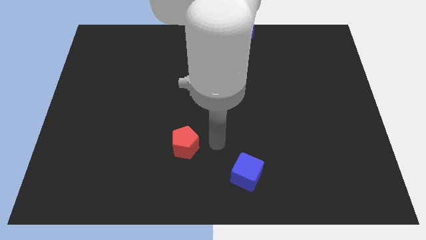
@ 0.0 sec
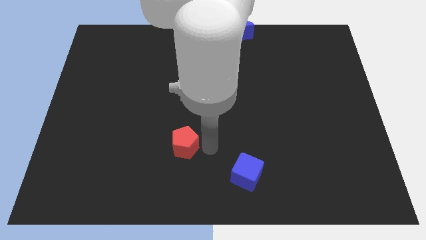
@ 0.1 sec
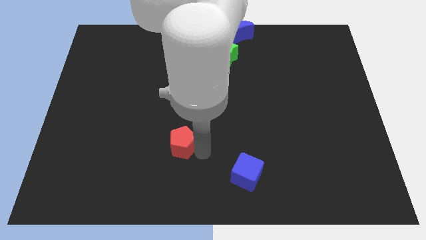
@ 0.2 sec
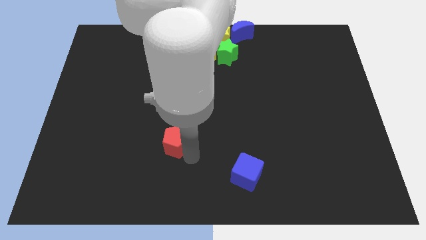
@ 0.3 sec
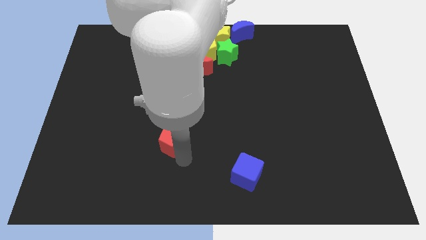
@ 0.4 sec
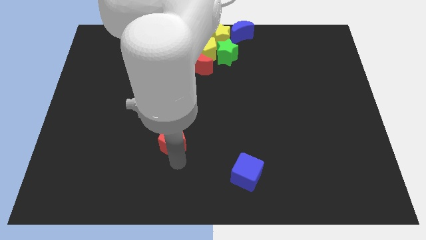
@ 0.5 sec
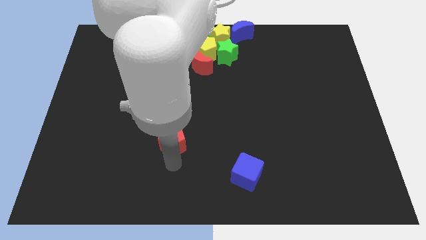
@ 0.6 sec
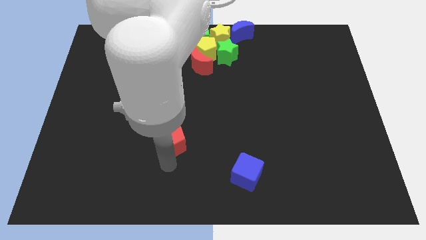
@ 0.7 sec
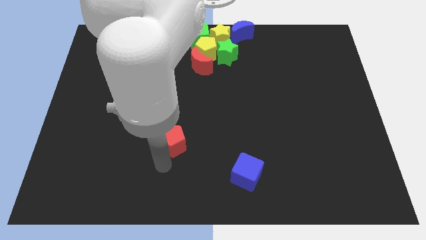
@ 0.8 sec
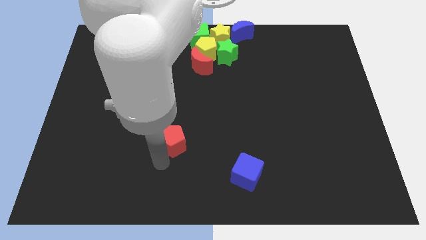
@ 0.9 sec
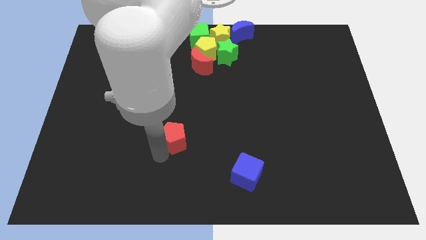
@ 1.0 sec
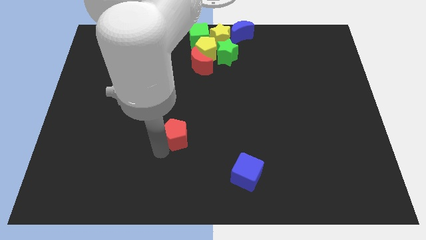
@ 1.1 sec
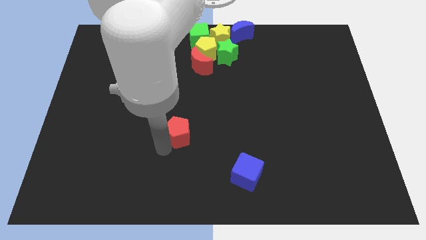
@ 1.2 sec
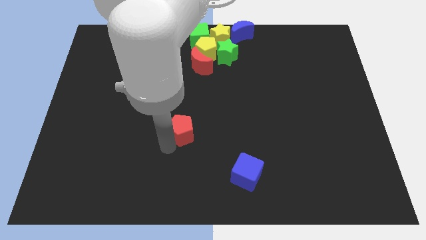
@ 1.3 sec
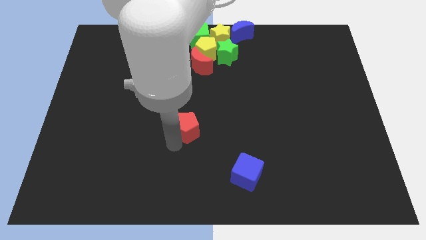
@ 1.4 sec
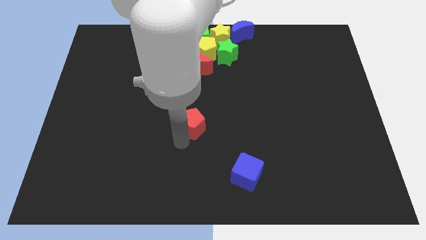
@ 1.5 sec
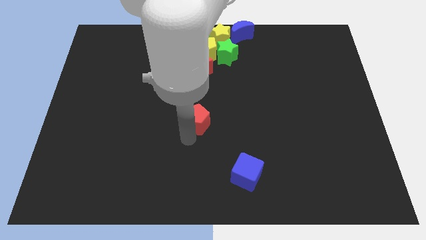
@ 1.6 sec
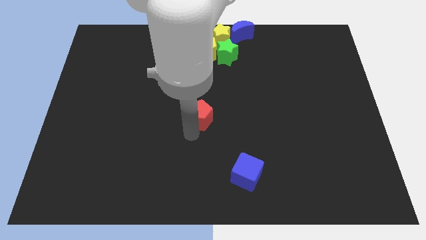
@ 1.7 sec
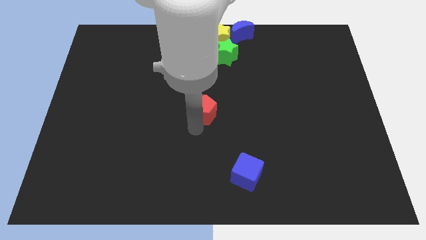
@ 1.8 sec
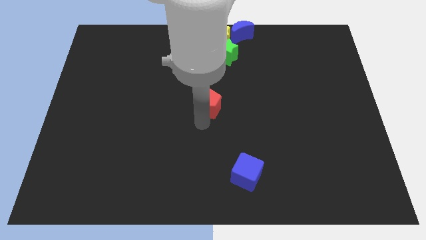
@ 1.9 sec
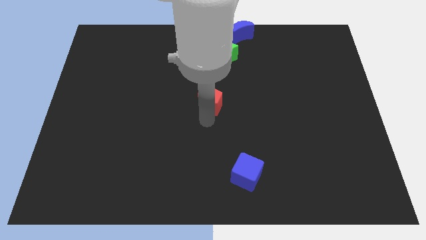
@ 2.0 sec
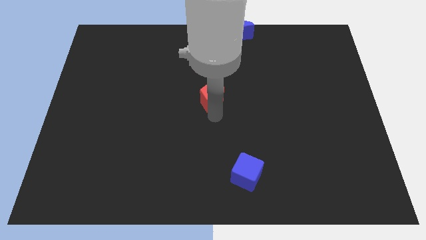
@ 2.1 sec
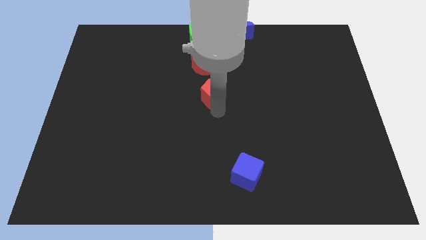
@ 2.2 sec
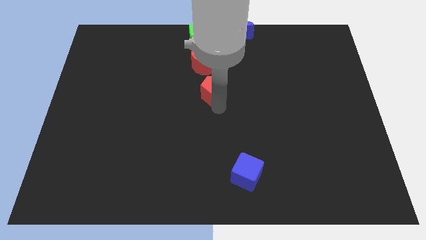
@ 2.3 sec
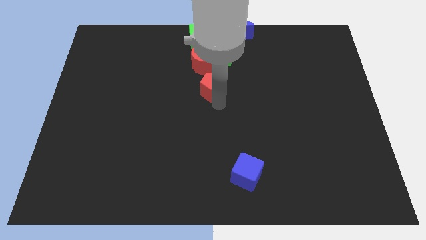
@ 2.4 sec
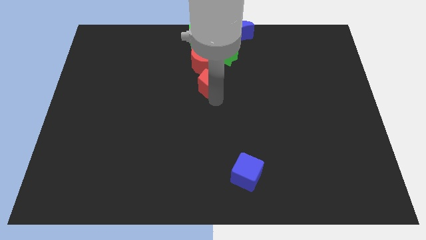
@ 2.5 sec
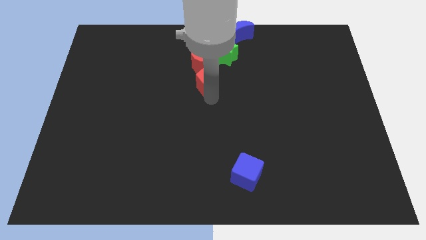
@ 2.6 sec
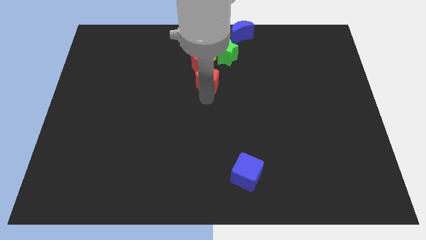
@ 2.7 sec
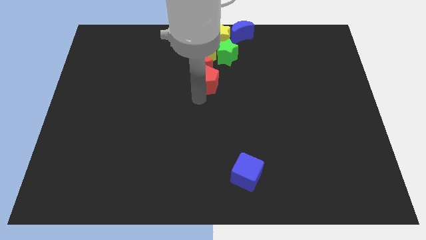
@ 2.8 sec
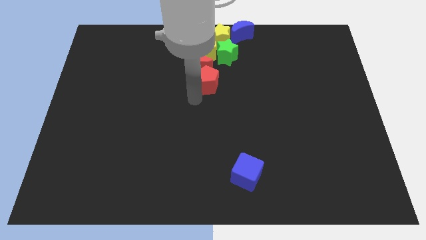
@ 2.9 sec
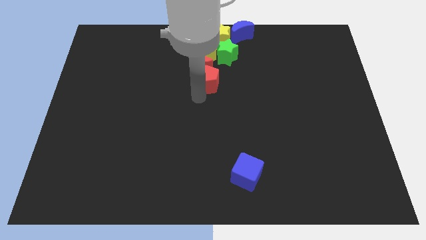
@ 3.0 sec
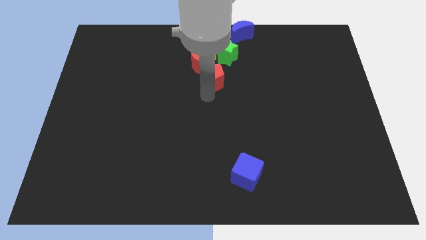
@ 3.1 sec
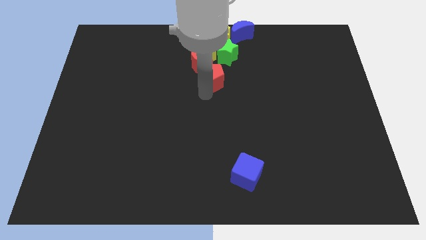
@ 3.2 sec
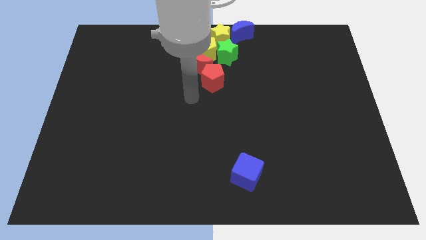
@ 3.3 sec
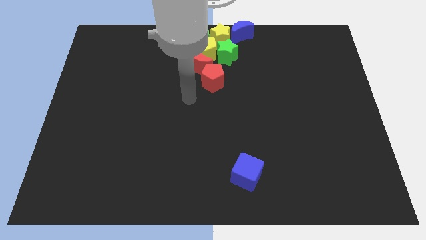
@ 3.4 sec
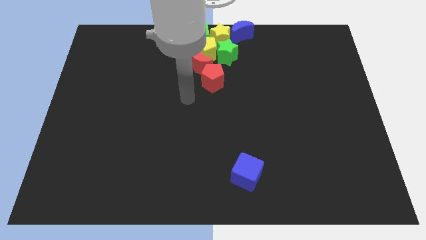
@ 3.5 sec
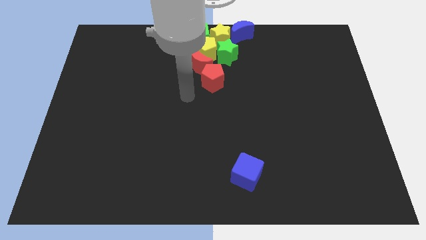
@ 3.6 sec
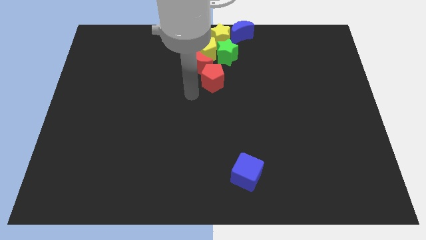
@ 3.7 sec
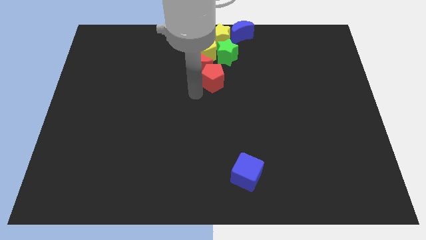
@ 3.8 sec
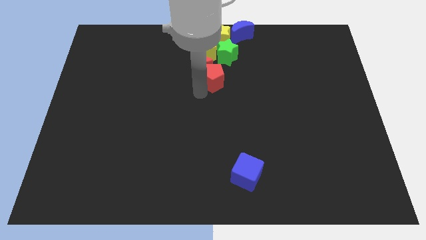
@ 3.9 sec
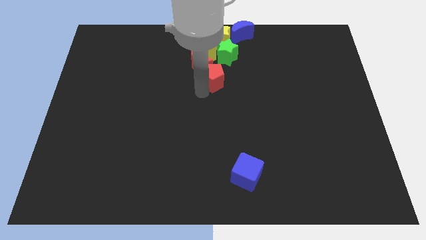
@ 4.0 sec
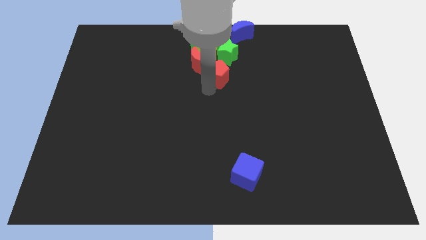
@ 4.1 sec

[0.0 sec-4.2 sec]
move the red pentagon towards the red crescent

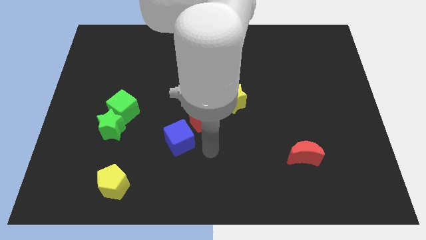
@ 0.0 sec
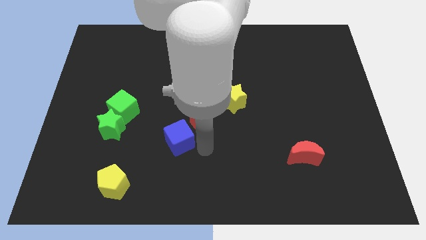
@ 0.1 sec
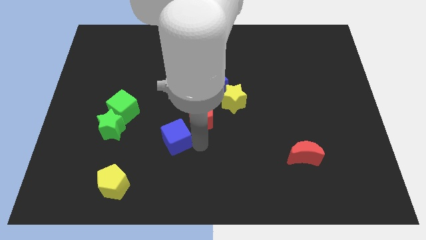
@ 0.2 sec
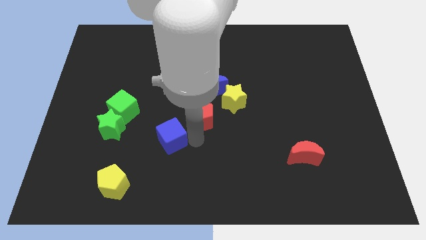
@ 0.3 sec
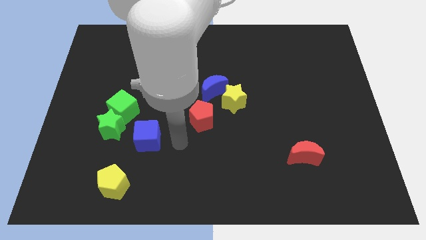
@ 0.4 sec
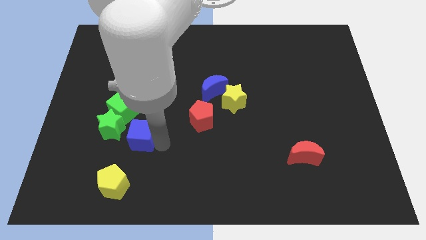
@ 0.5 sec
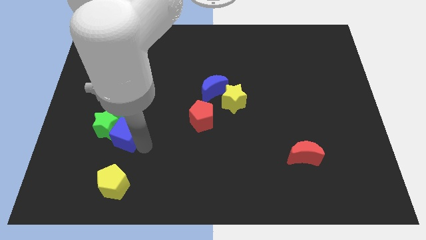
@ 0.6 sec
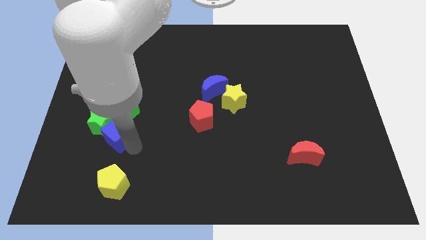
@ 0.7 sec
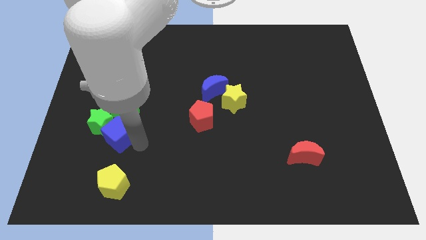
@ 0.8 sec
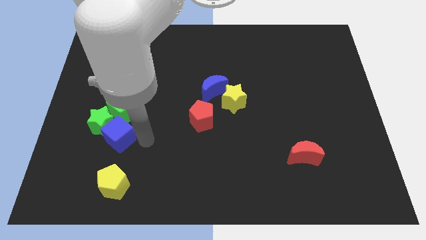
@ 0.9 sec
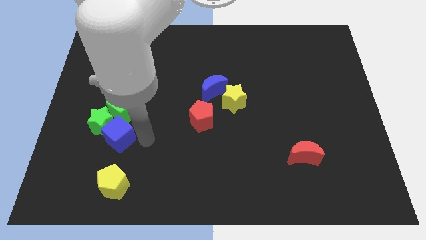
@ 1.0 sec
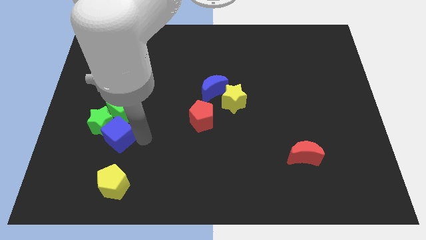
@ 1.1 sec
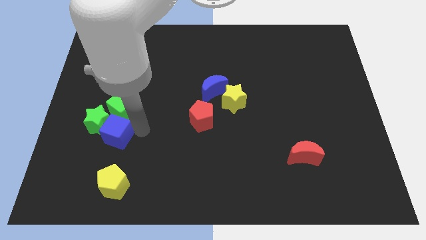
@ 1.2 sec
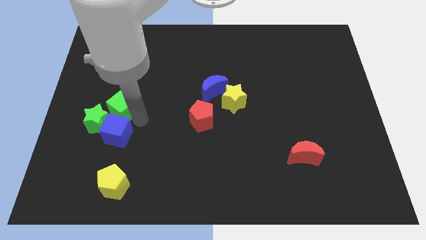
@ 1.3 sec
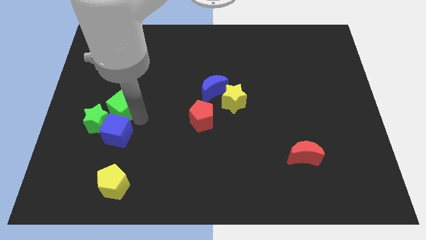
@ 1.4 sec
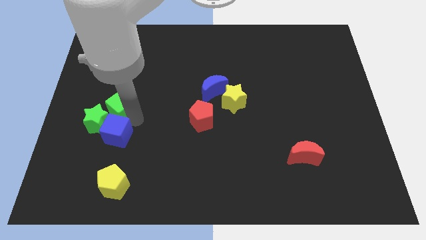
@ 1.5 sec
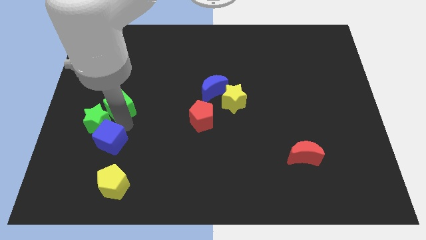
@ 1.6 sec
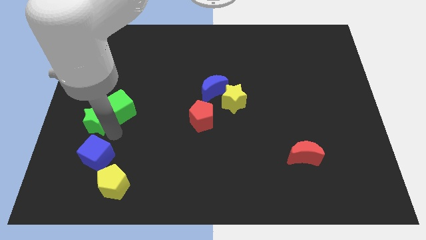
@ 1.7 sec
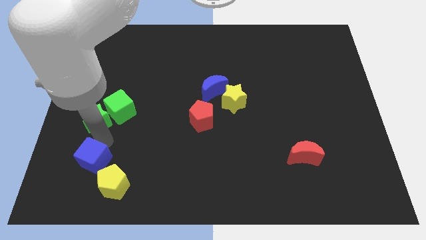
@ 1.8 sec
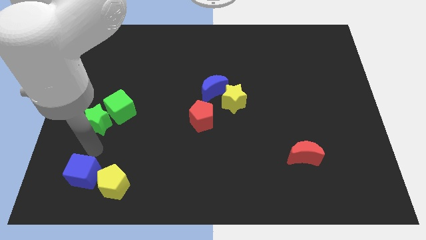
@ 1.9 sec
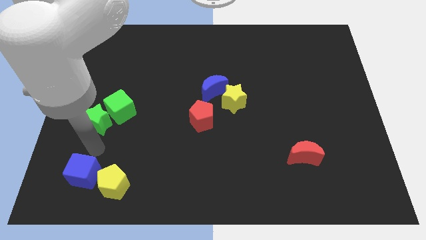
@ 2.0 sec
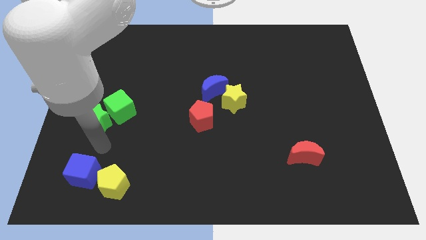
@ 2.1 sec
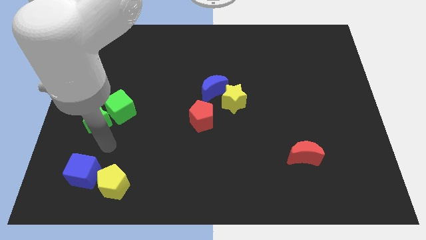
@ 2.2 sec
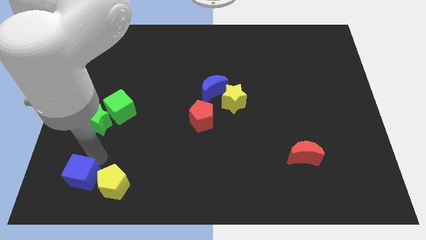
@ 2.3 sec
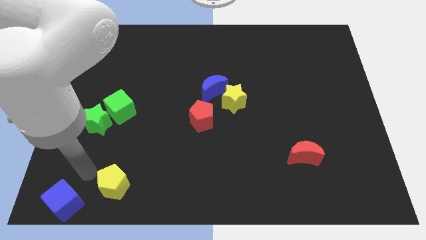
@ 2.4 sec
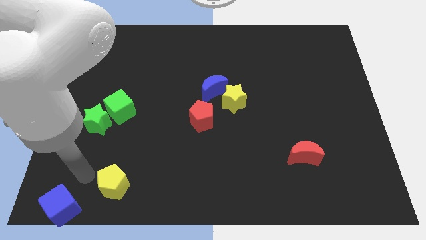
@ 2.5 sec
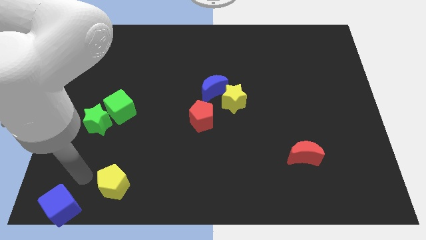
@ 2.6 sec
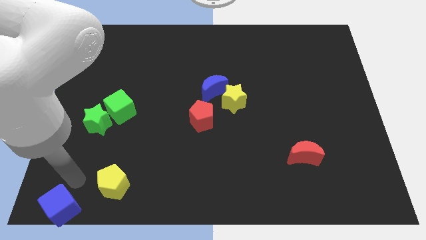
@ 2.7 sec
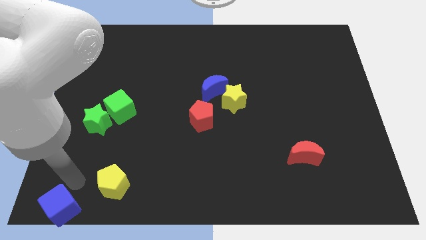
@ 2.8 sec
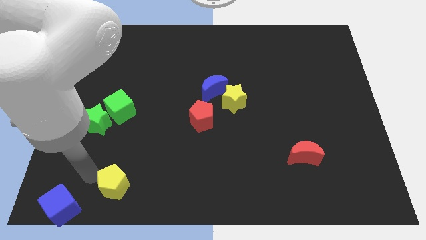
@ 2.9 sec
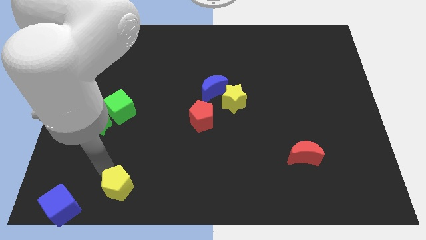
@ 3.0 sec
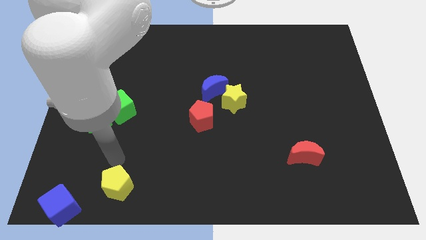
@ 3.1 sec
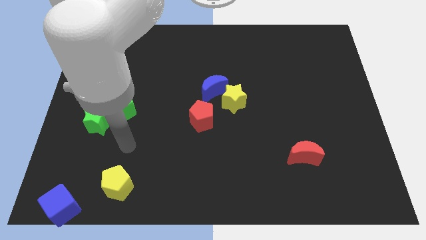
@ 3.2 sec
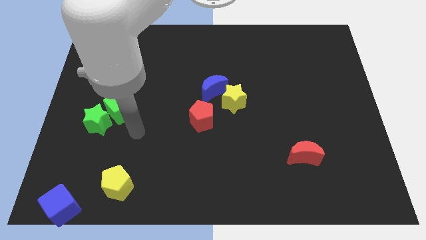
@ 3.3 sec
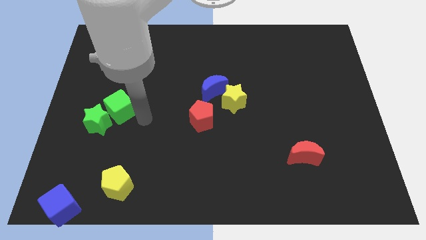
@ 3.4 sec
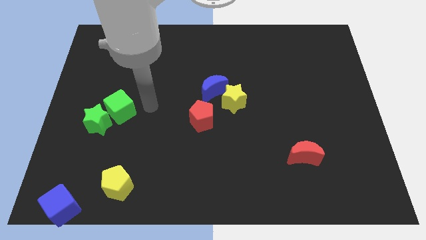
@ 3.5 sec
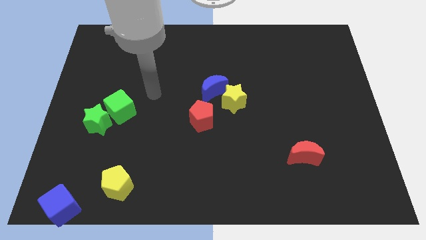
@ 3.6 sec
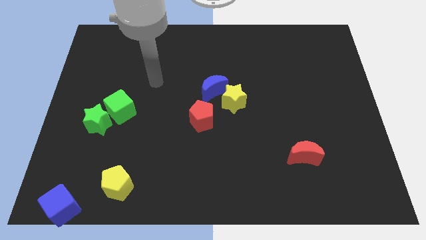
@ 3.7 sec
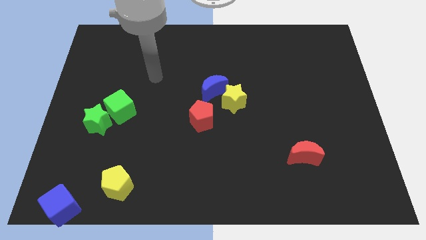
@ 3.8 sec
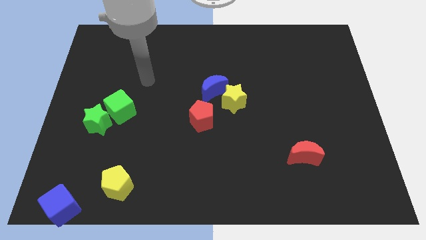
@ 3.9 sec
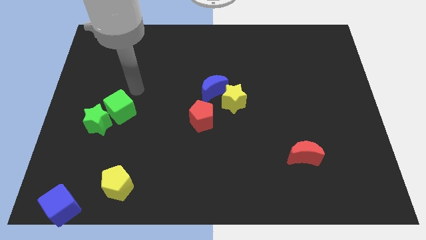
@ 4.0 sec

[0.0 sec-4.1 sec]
place the blue cube at the bottom left of the board

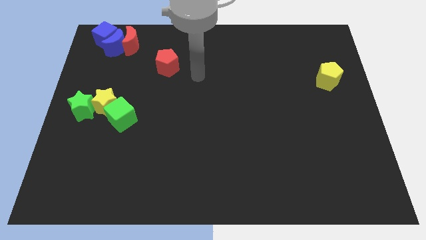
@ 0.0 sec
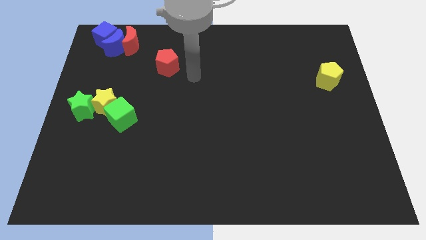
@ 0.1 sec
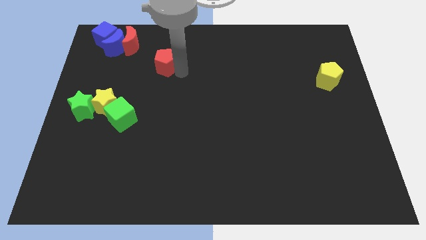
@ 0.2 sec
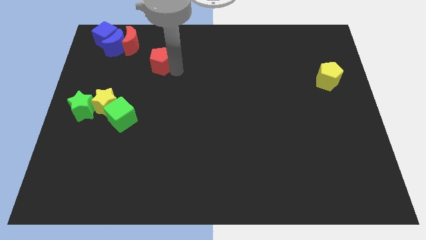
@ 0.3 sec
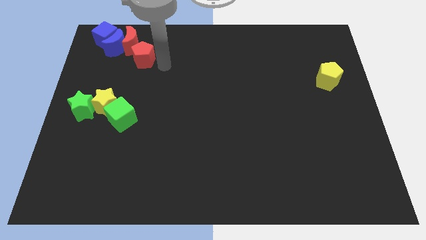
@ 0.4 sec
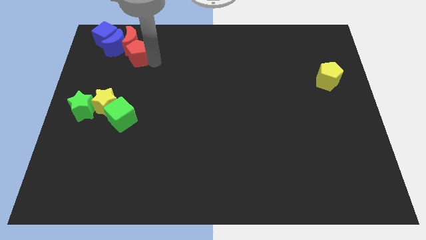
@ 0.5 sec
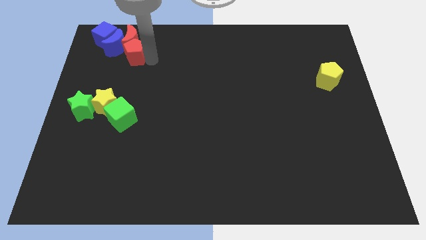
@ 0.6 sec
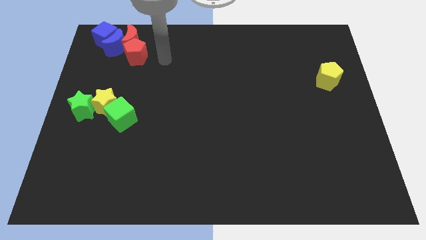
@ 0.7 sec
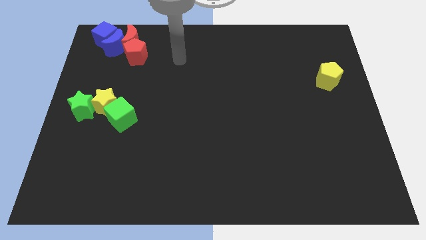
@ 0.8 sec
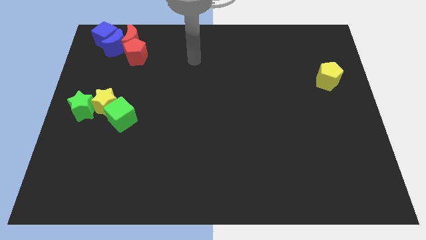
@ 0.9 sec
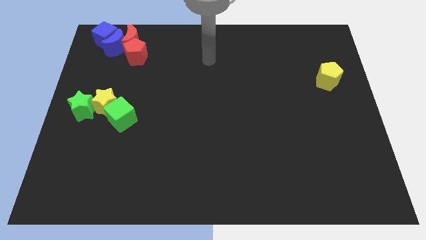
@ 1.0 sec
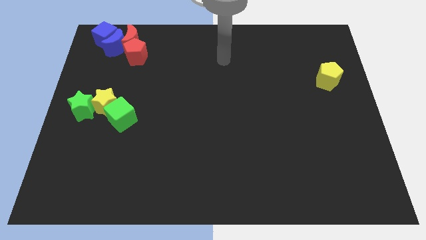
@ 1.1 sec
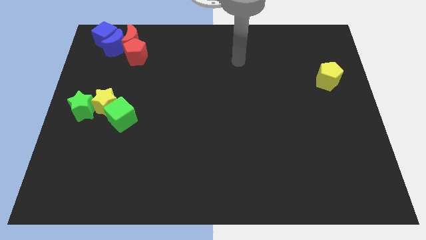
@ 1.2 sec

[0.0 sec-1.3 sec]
move the red pentagon into the red crescent
